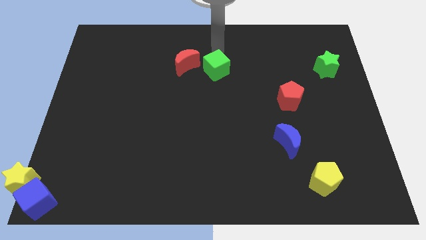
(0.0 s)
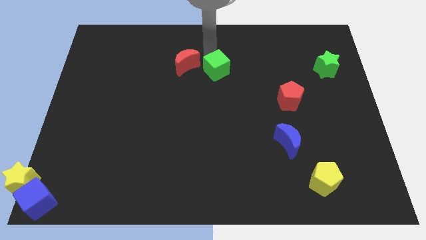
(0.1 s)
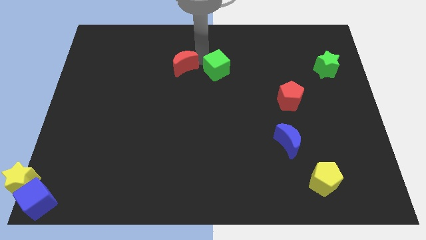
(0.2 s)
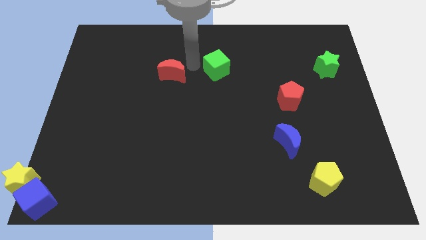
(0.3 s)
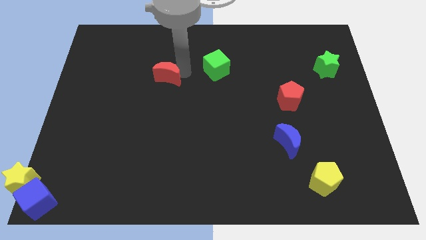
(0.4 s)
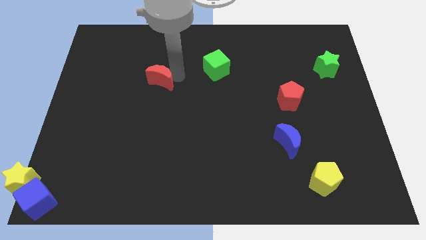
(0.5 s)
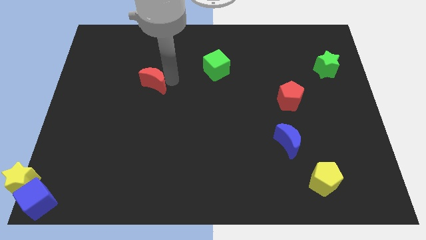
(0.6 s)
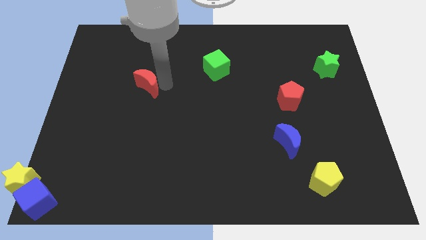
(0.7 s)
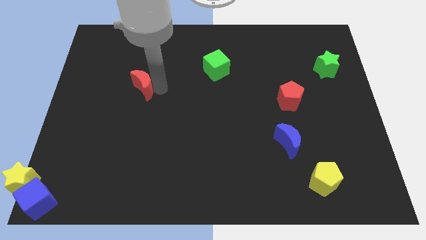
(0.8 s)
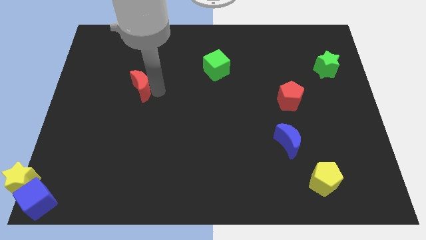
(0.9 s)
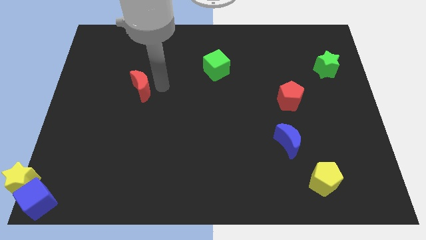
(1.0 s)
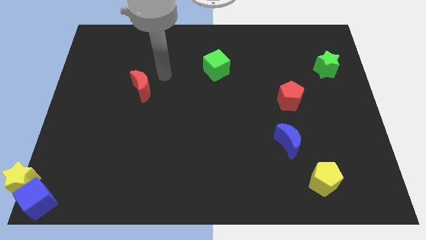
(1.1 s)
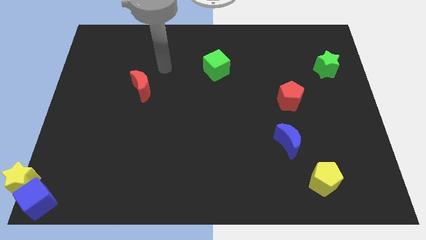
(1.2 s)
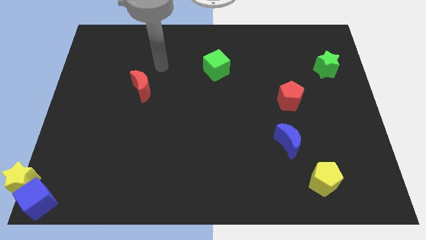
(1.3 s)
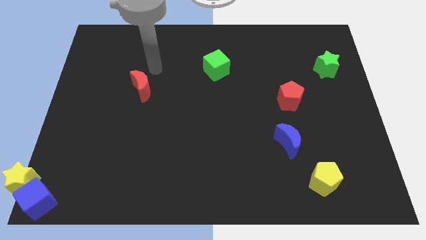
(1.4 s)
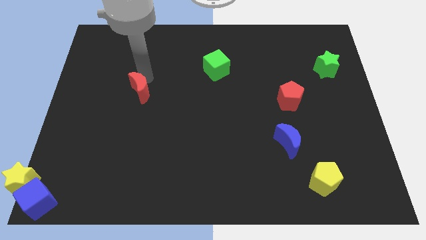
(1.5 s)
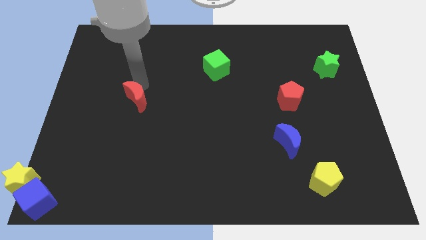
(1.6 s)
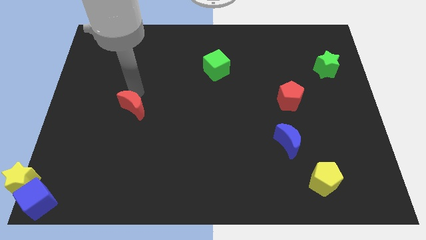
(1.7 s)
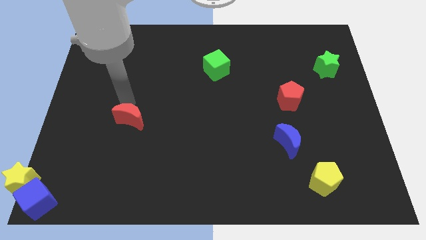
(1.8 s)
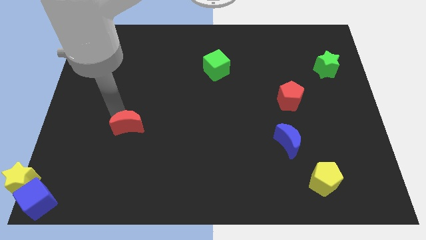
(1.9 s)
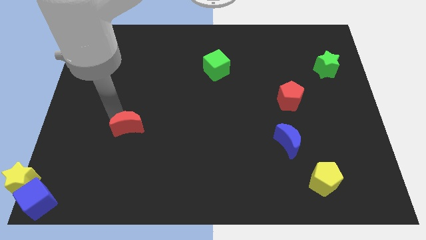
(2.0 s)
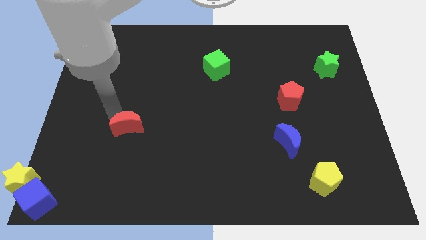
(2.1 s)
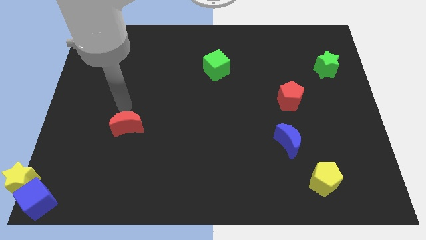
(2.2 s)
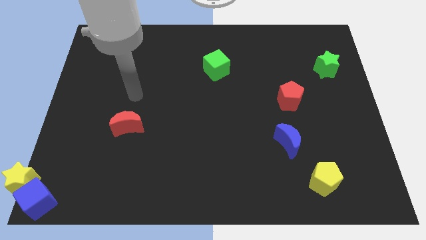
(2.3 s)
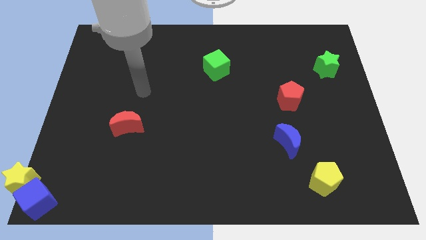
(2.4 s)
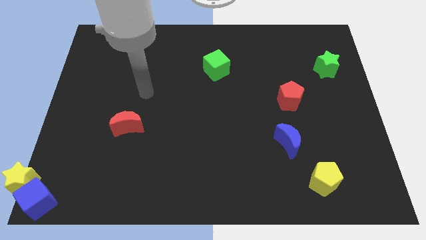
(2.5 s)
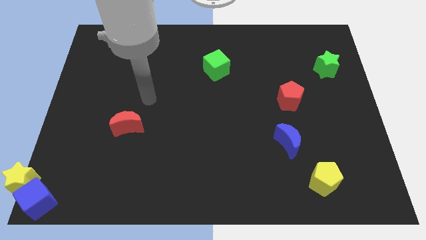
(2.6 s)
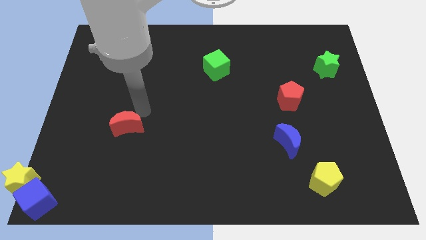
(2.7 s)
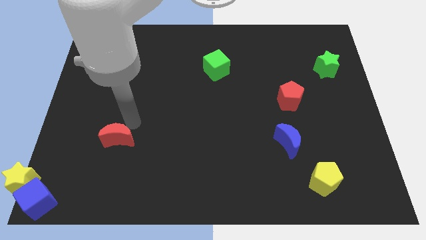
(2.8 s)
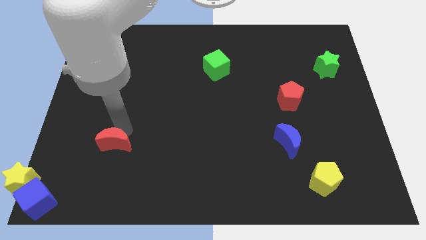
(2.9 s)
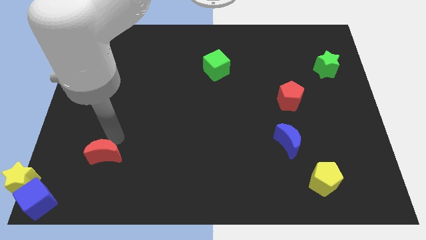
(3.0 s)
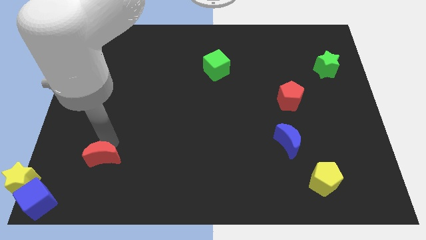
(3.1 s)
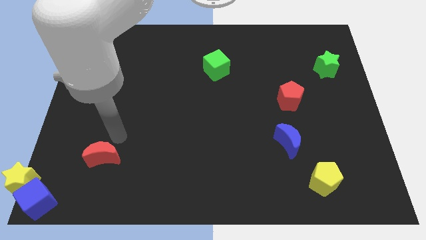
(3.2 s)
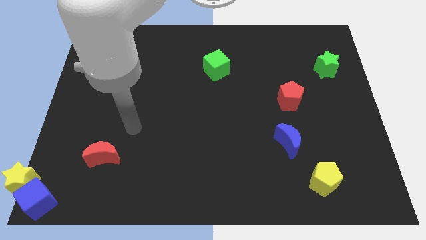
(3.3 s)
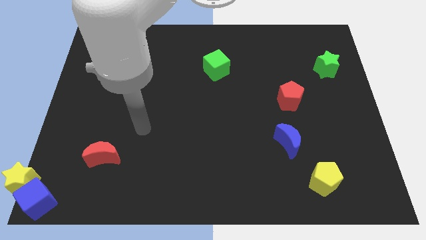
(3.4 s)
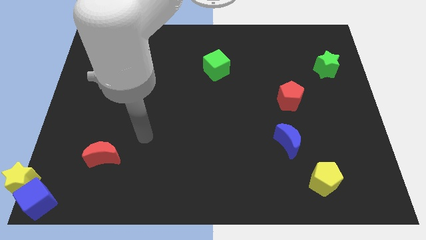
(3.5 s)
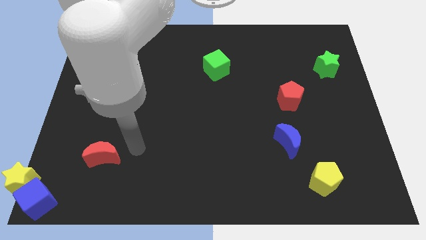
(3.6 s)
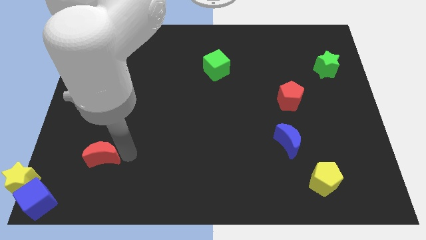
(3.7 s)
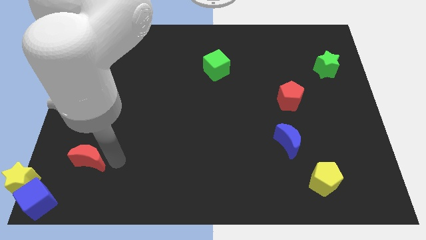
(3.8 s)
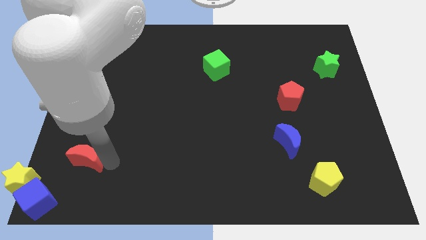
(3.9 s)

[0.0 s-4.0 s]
place the red moon top right to the yellow star

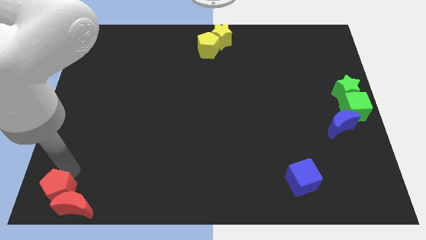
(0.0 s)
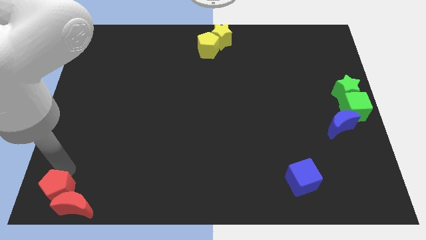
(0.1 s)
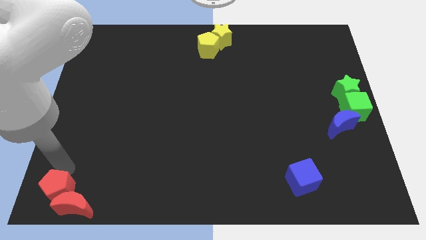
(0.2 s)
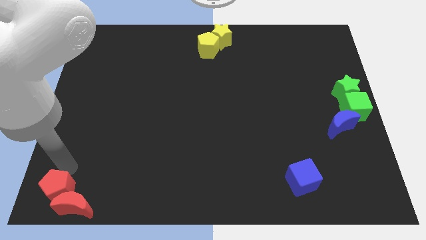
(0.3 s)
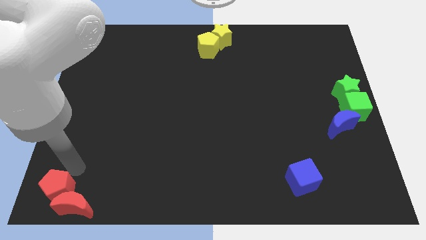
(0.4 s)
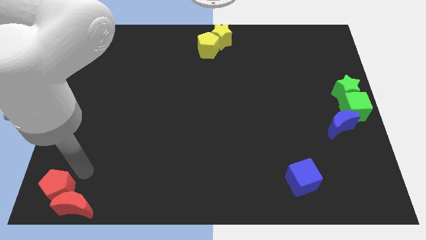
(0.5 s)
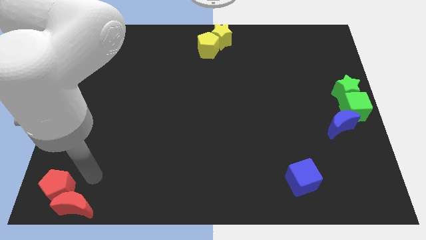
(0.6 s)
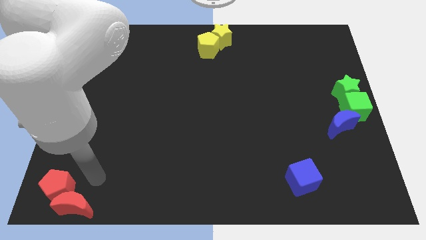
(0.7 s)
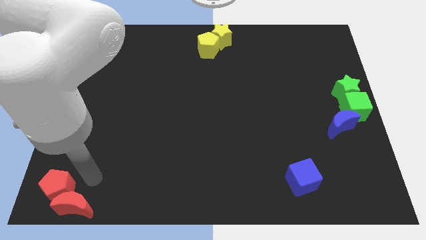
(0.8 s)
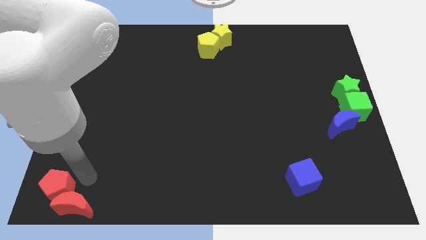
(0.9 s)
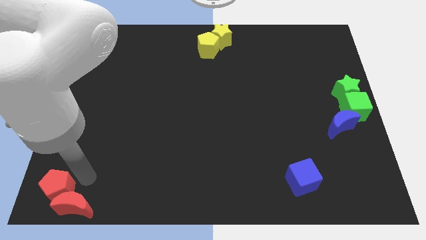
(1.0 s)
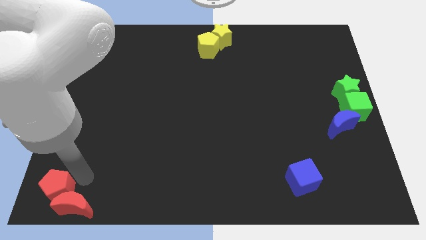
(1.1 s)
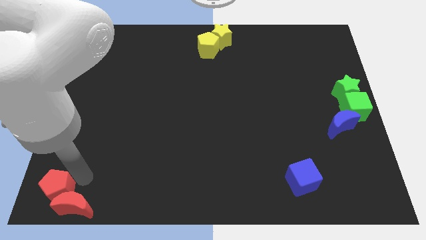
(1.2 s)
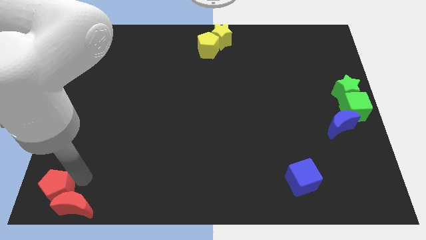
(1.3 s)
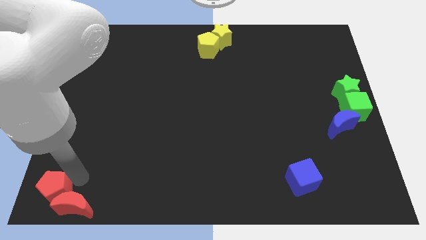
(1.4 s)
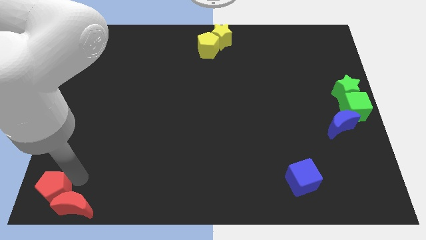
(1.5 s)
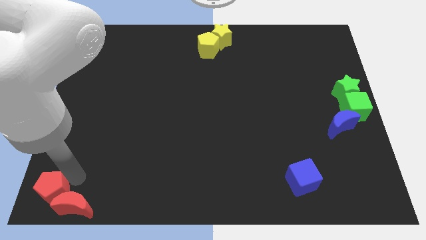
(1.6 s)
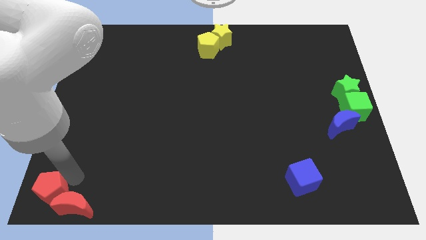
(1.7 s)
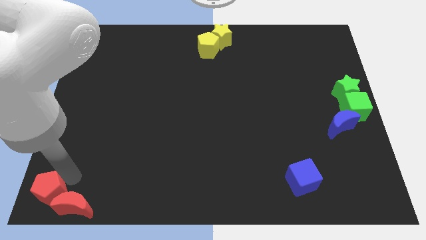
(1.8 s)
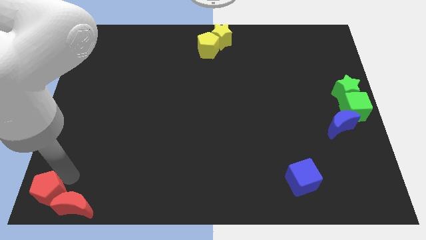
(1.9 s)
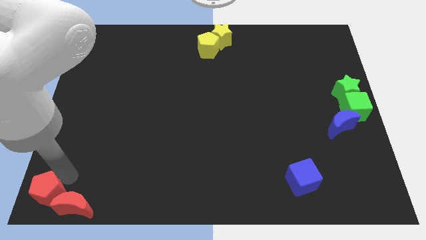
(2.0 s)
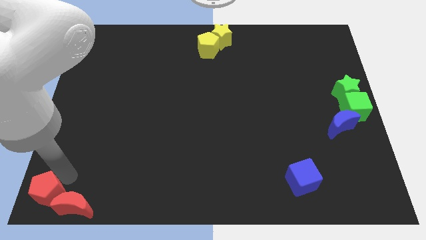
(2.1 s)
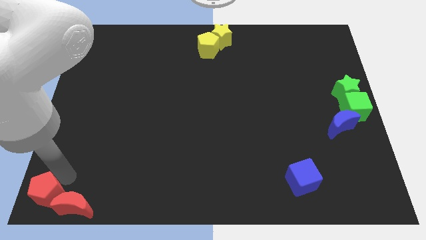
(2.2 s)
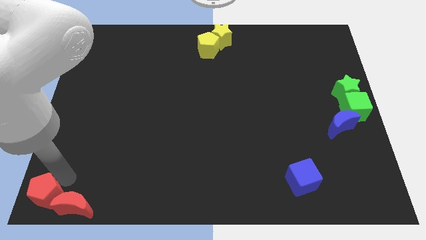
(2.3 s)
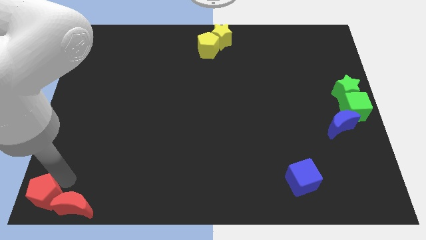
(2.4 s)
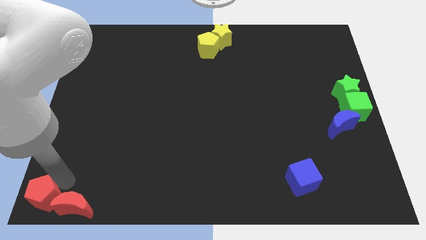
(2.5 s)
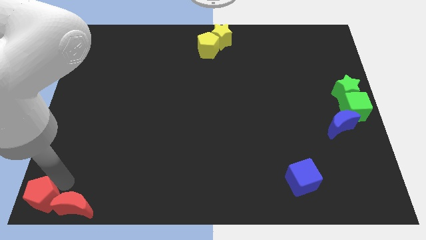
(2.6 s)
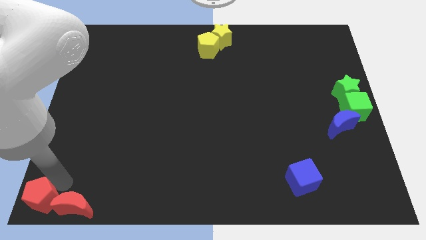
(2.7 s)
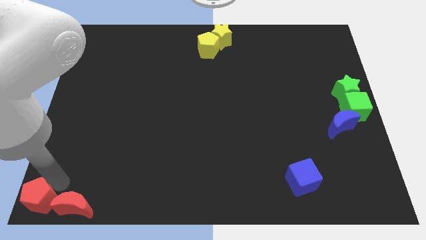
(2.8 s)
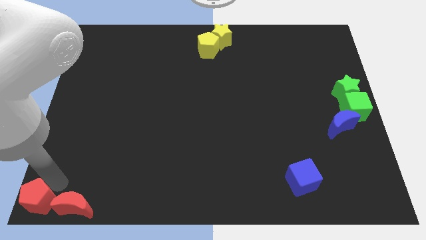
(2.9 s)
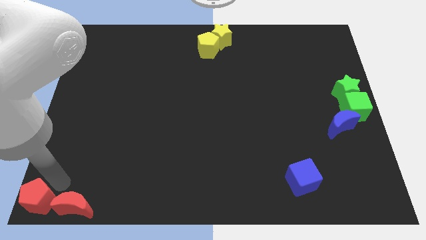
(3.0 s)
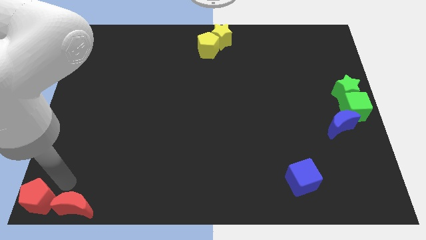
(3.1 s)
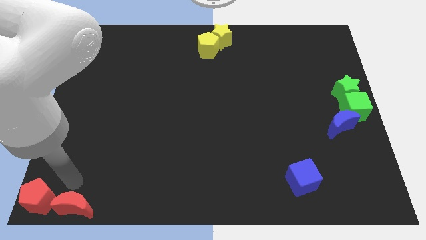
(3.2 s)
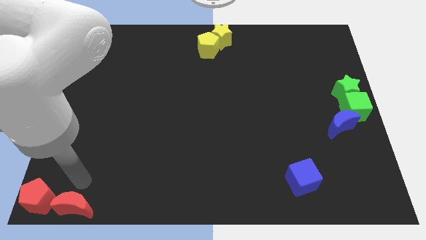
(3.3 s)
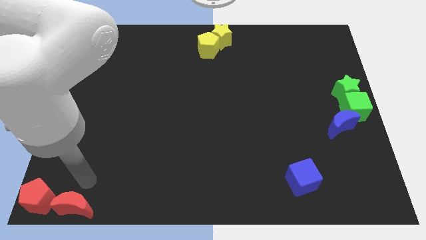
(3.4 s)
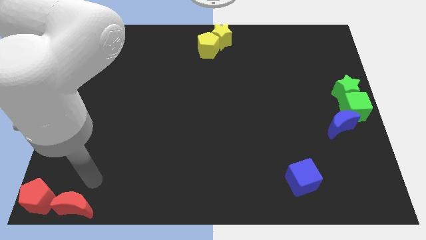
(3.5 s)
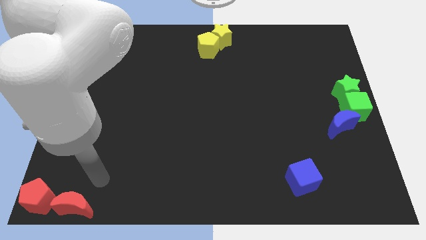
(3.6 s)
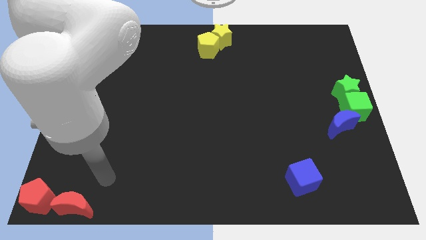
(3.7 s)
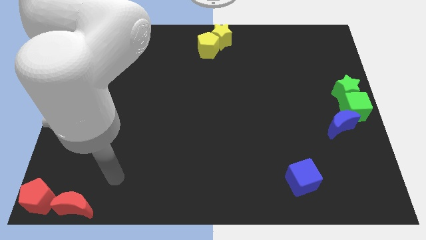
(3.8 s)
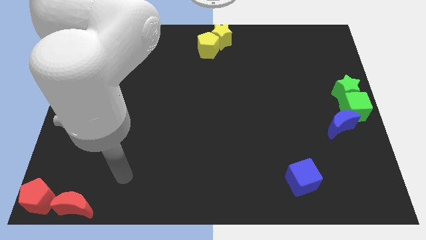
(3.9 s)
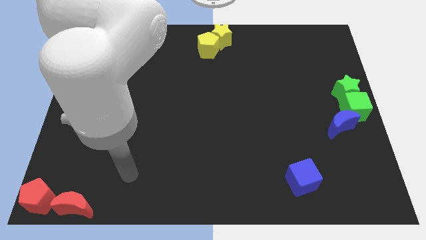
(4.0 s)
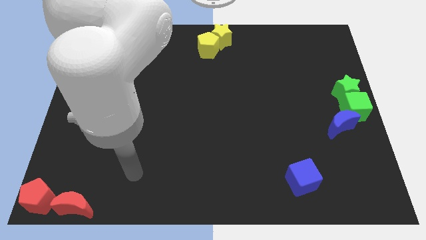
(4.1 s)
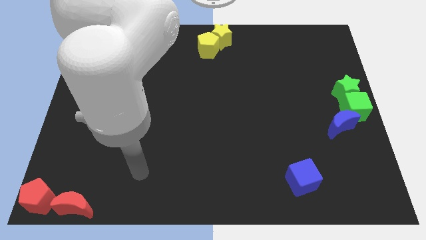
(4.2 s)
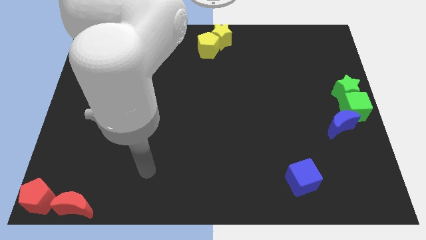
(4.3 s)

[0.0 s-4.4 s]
slide the red pentagon to the bottom left corner

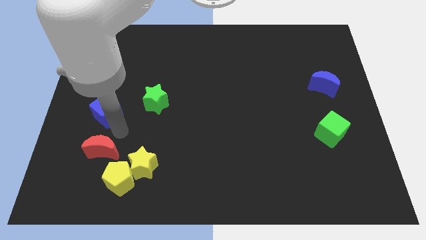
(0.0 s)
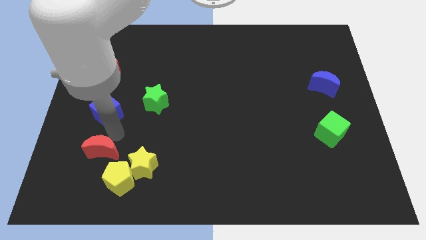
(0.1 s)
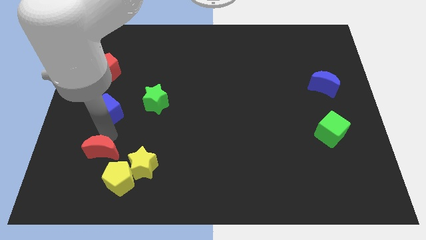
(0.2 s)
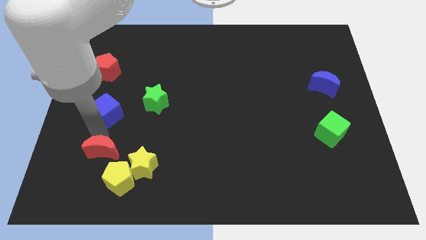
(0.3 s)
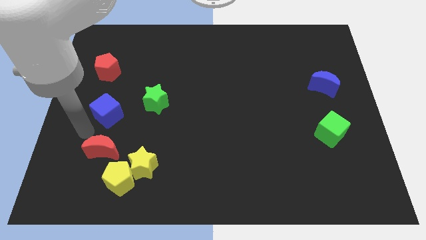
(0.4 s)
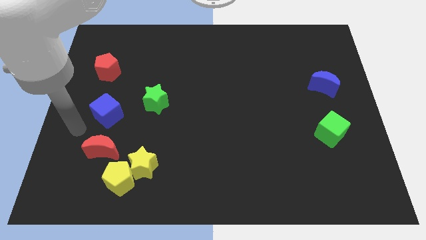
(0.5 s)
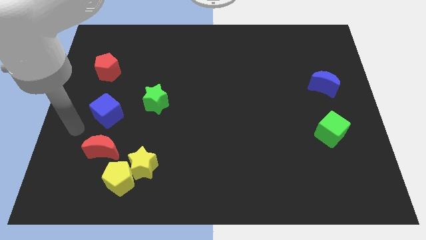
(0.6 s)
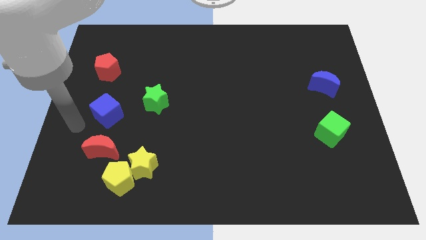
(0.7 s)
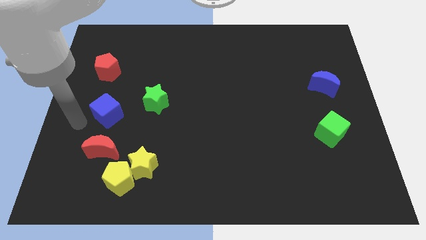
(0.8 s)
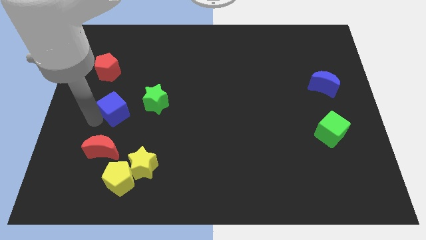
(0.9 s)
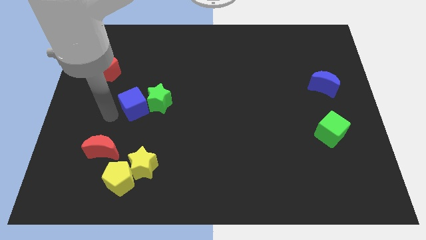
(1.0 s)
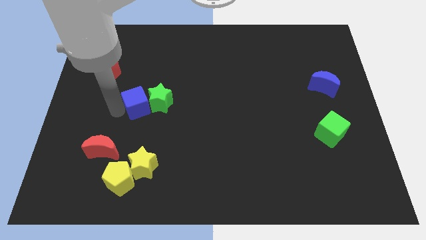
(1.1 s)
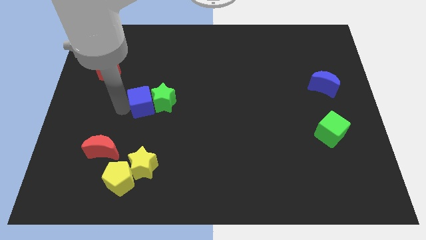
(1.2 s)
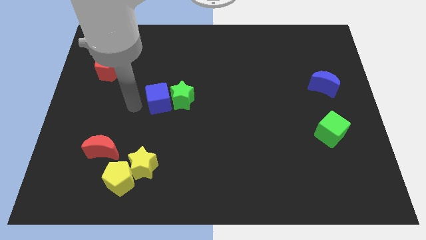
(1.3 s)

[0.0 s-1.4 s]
push the blue cube into the green star
